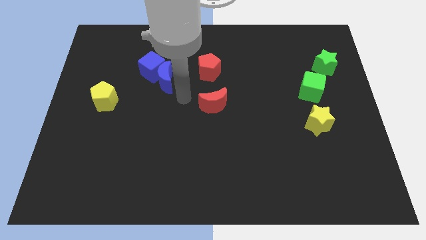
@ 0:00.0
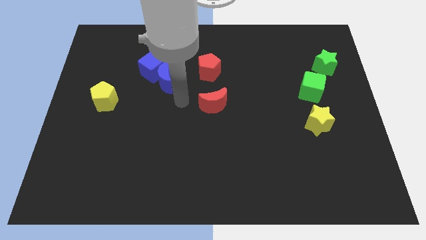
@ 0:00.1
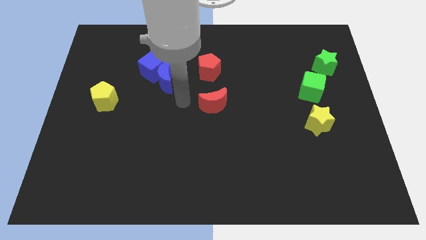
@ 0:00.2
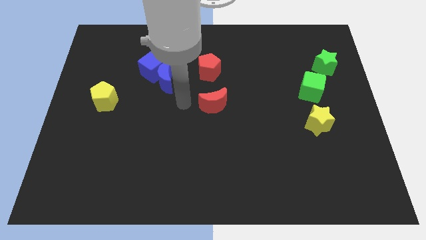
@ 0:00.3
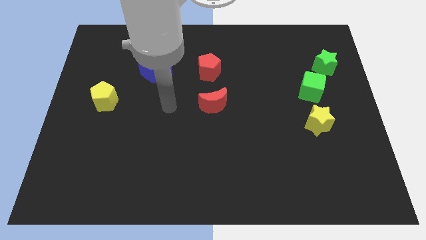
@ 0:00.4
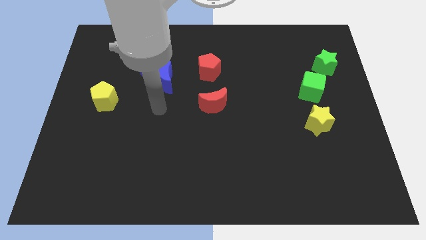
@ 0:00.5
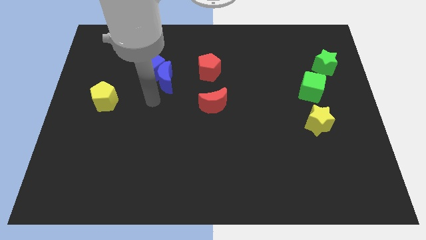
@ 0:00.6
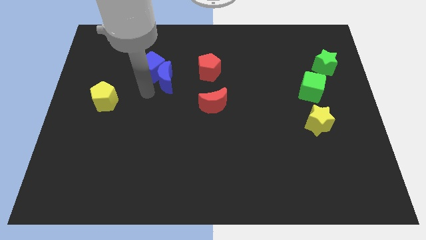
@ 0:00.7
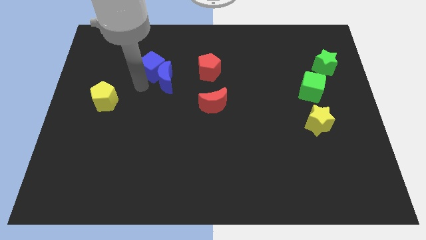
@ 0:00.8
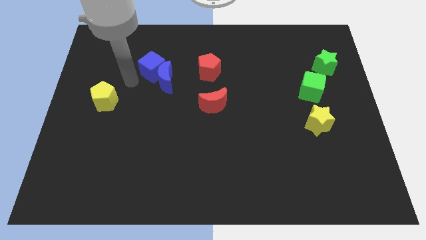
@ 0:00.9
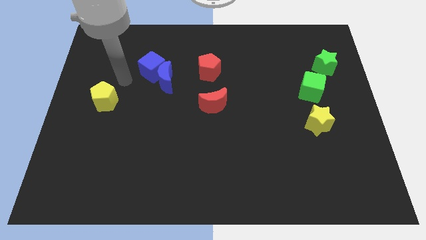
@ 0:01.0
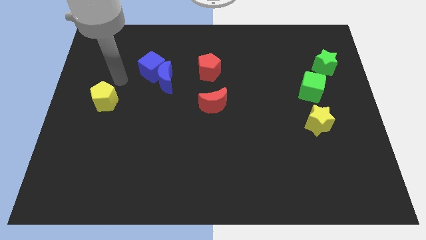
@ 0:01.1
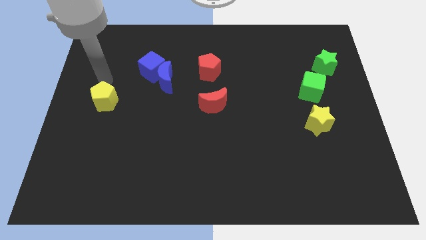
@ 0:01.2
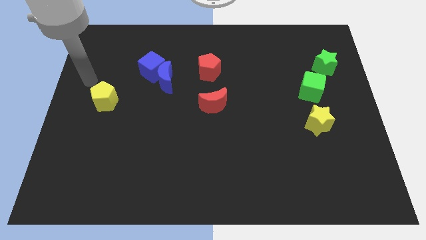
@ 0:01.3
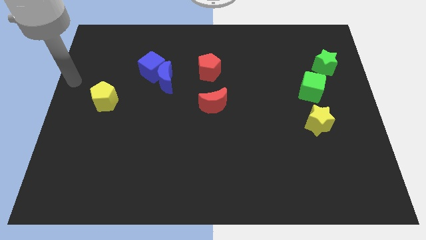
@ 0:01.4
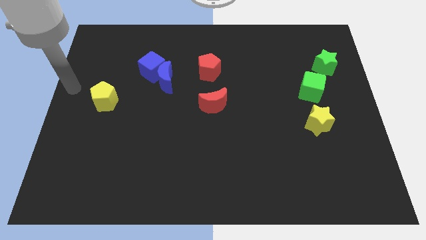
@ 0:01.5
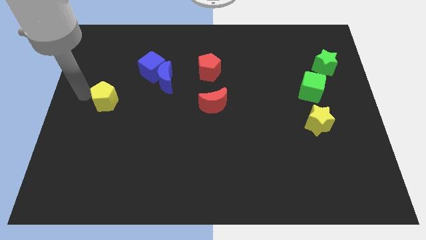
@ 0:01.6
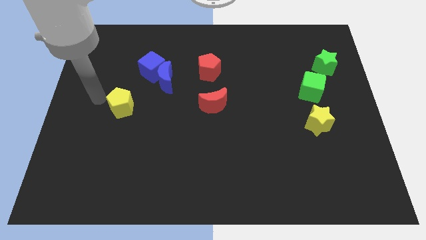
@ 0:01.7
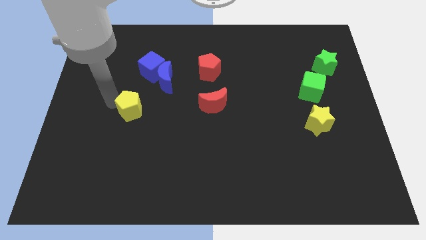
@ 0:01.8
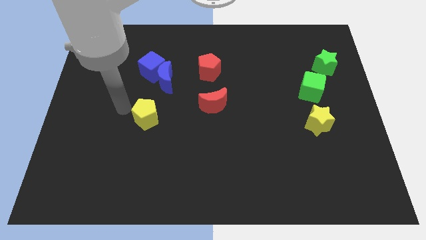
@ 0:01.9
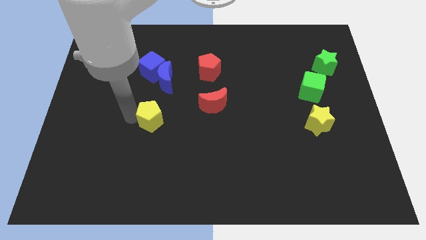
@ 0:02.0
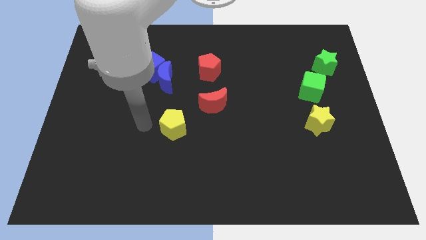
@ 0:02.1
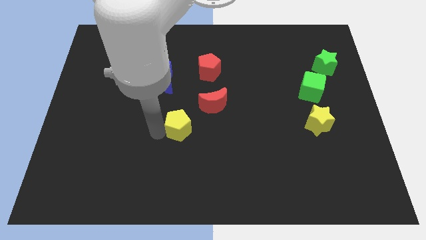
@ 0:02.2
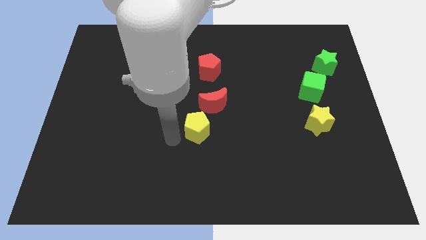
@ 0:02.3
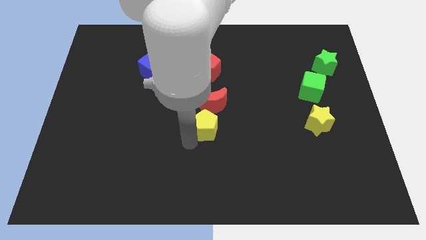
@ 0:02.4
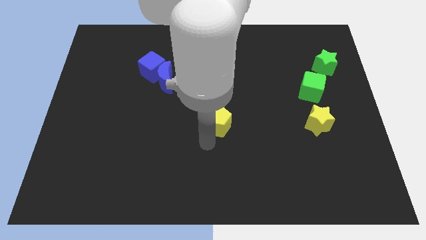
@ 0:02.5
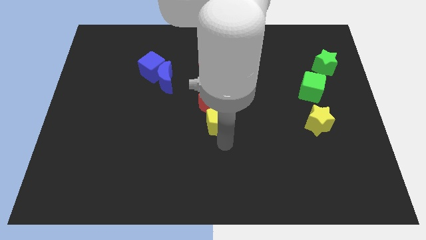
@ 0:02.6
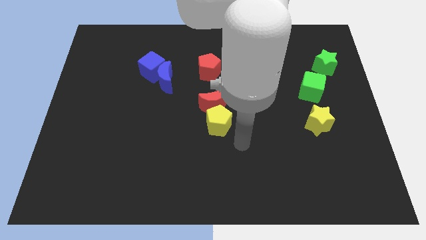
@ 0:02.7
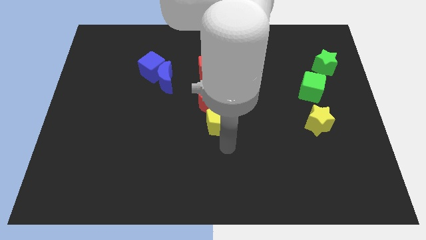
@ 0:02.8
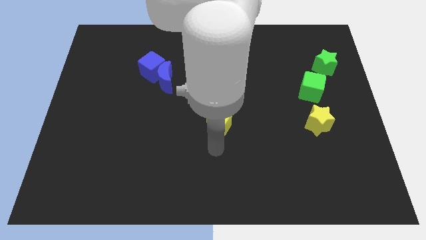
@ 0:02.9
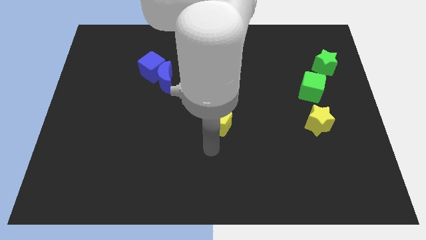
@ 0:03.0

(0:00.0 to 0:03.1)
place yellow pentagon below red moon

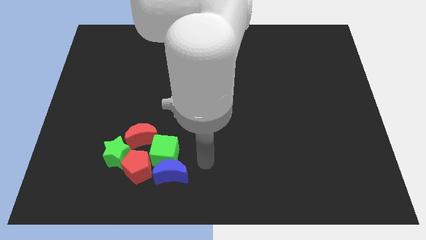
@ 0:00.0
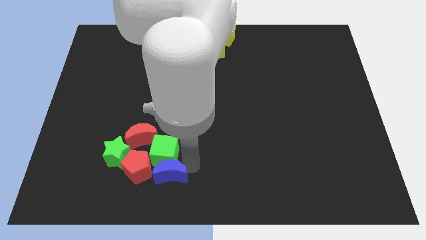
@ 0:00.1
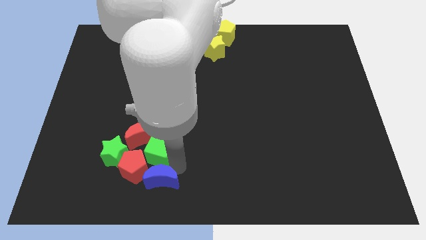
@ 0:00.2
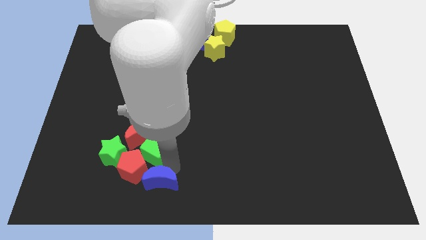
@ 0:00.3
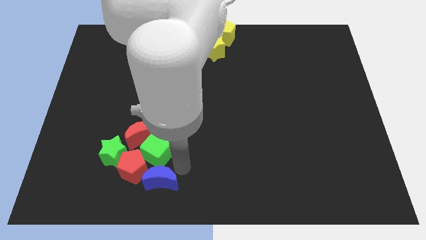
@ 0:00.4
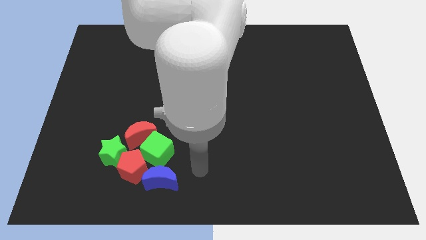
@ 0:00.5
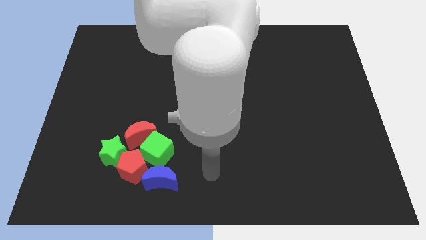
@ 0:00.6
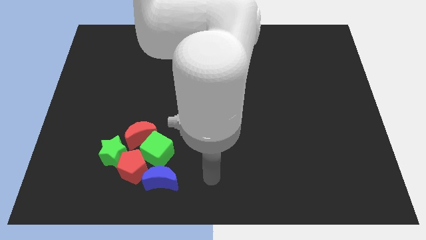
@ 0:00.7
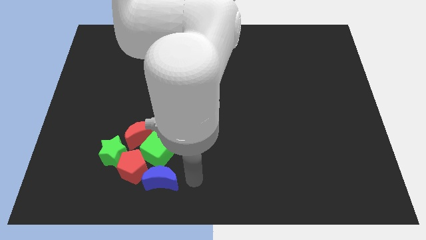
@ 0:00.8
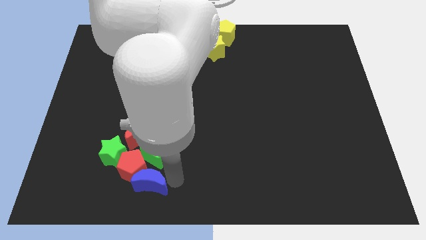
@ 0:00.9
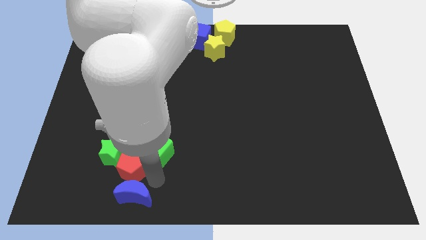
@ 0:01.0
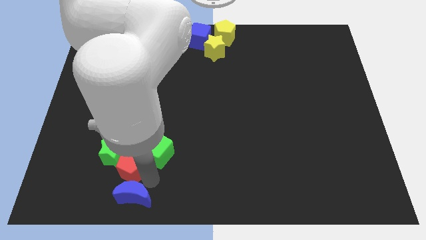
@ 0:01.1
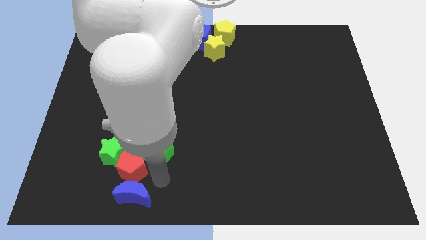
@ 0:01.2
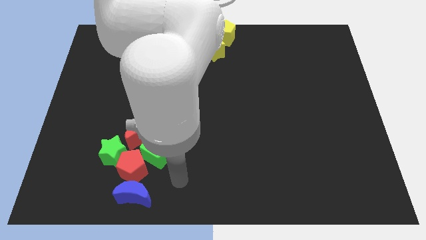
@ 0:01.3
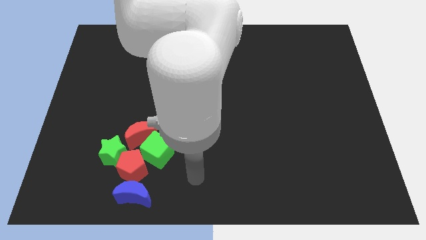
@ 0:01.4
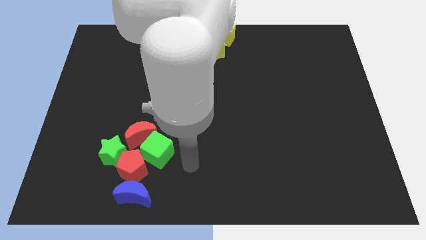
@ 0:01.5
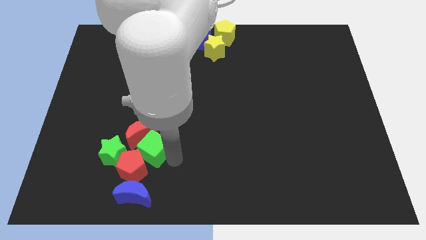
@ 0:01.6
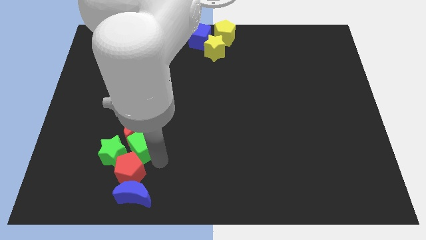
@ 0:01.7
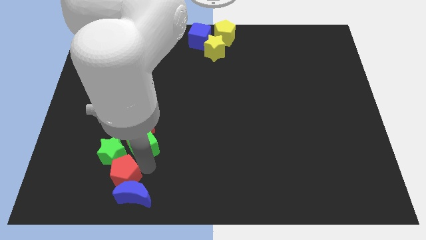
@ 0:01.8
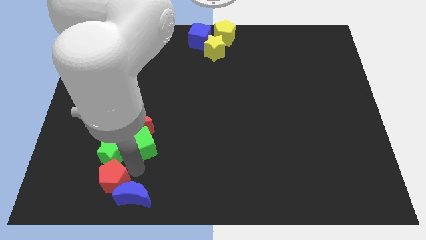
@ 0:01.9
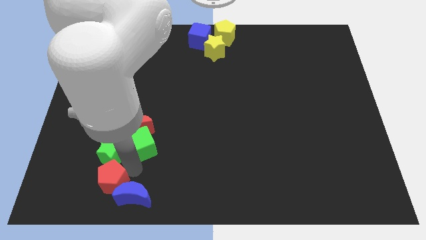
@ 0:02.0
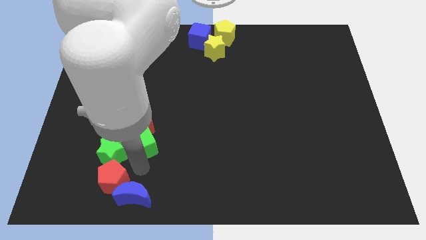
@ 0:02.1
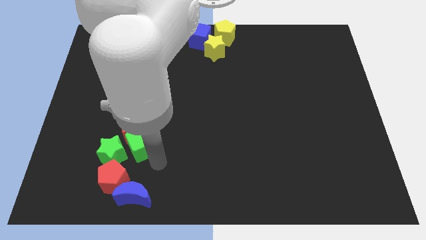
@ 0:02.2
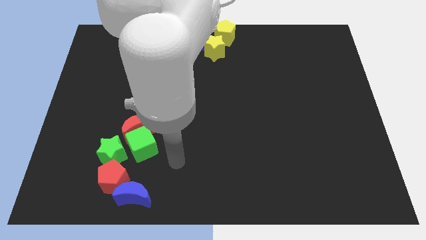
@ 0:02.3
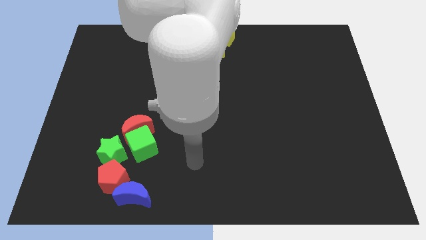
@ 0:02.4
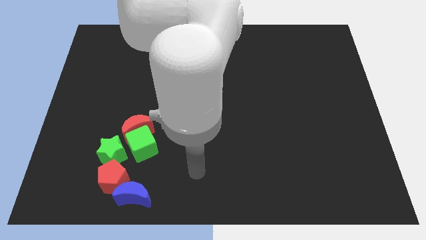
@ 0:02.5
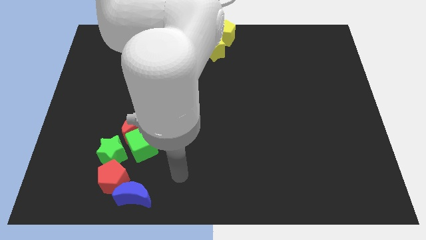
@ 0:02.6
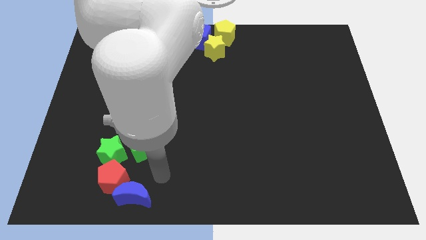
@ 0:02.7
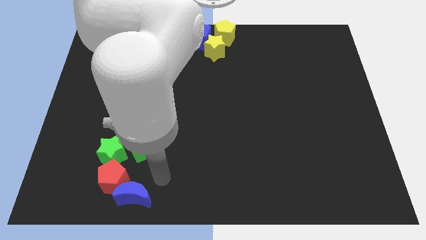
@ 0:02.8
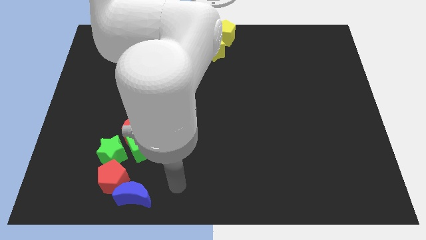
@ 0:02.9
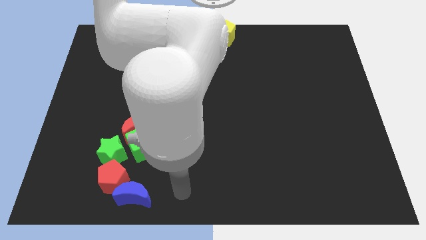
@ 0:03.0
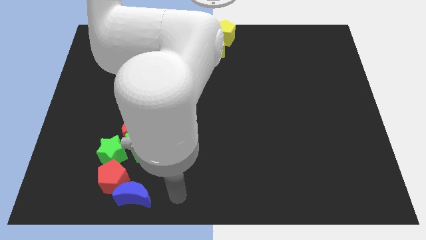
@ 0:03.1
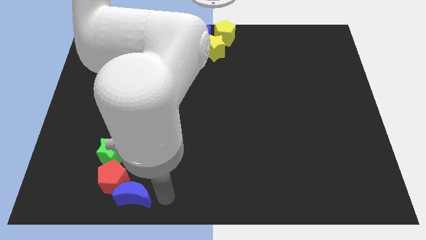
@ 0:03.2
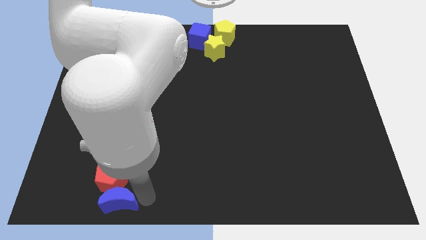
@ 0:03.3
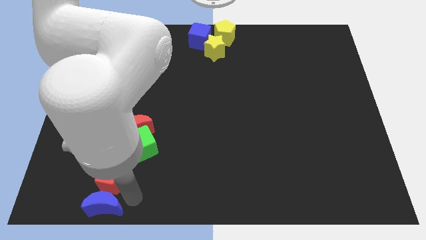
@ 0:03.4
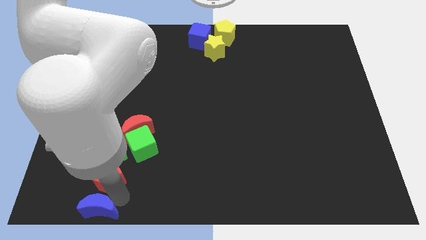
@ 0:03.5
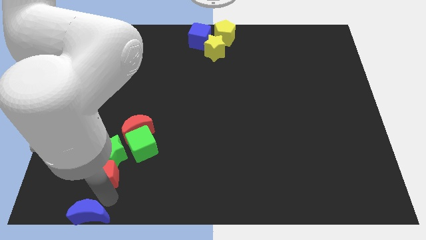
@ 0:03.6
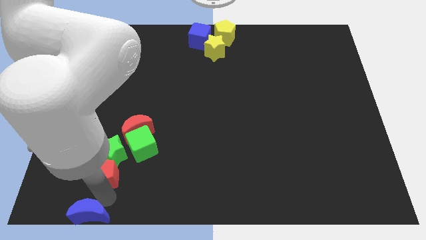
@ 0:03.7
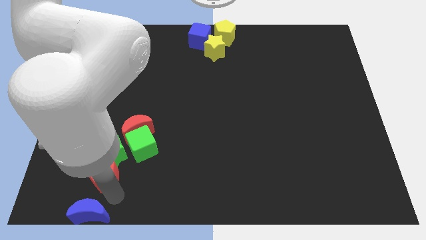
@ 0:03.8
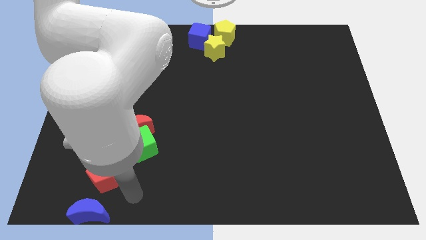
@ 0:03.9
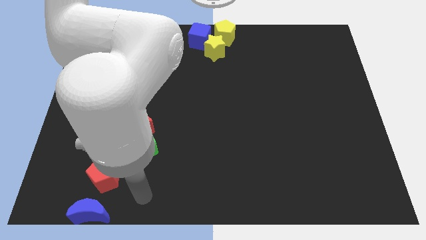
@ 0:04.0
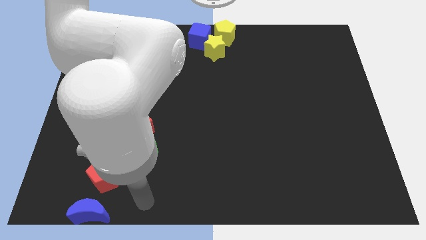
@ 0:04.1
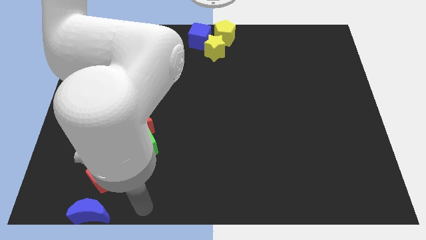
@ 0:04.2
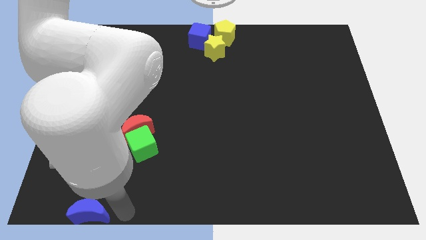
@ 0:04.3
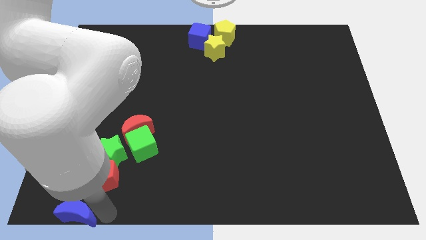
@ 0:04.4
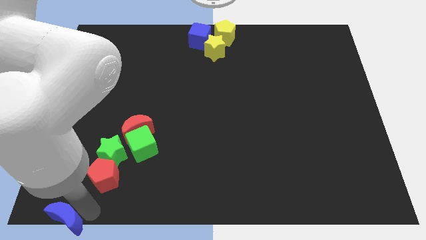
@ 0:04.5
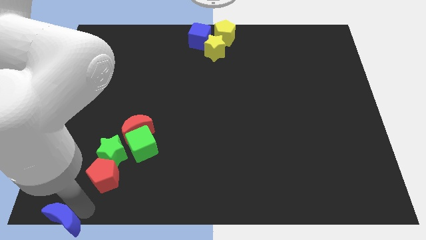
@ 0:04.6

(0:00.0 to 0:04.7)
separate the blue crescent from the group of blocks

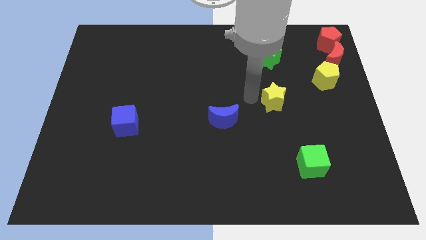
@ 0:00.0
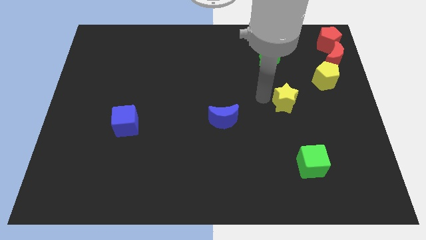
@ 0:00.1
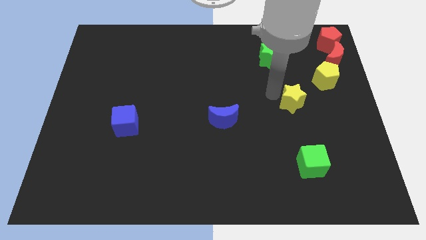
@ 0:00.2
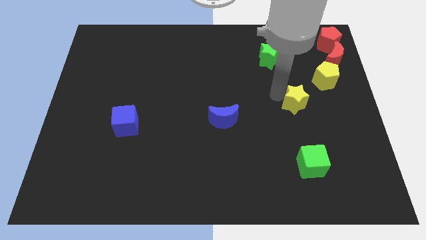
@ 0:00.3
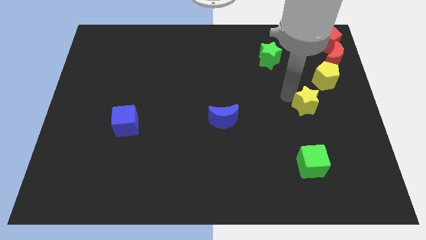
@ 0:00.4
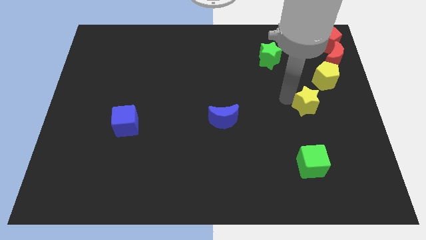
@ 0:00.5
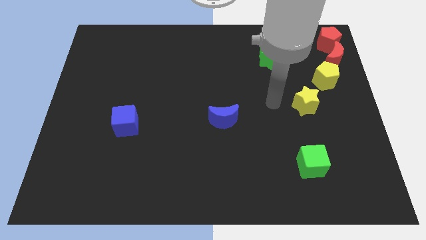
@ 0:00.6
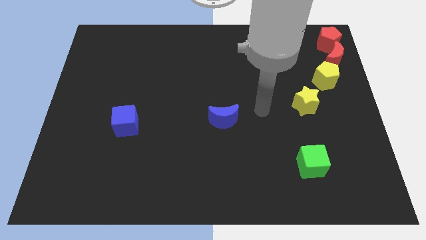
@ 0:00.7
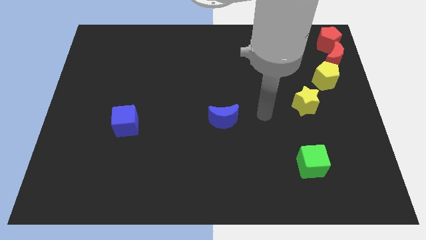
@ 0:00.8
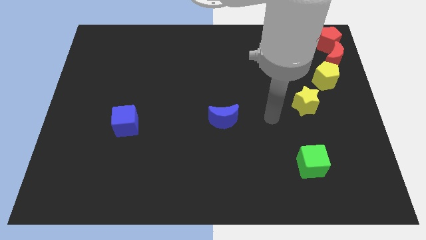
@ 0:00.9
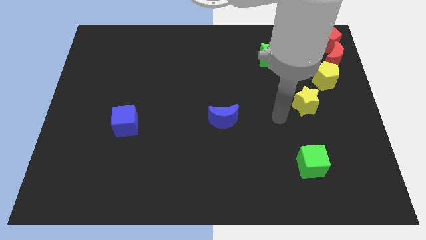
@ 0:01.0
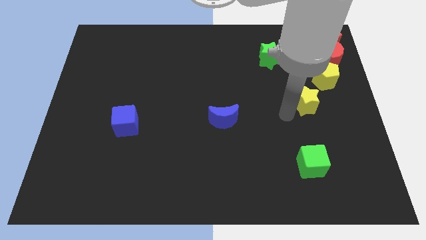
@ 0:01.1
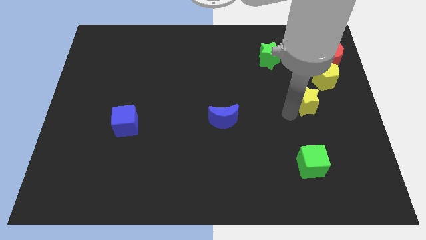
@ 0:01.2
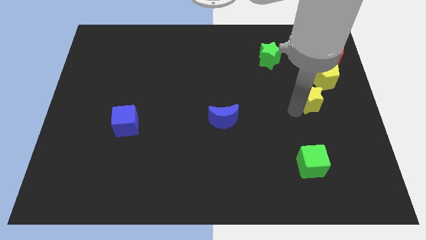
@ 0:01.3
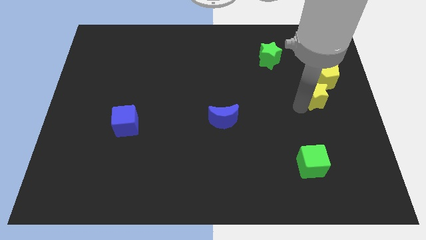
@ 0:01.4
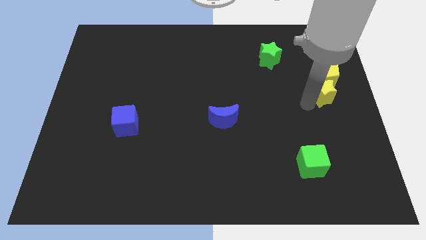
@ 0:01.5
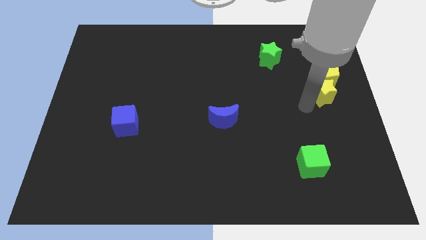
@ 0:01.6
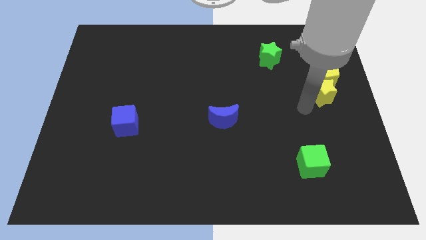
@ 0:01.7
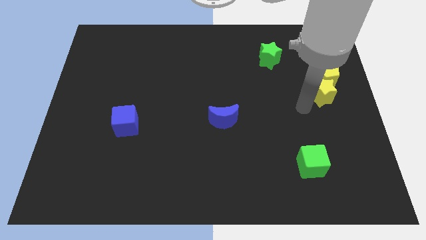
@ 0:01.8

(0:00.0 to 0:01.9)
push the yellow star close to the yellow pentagon
